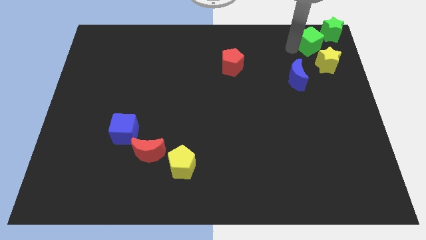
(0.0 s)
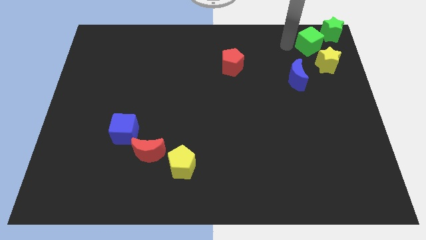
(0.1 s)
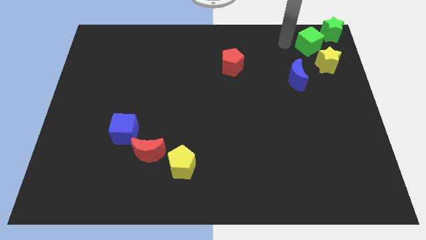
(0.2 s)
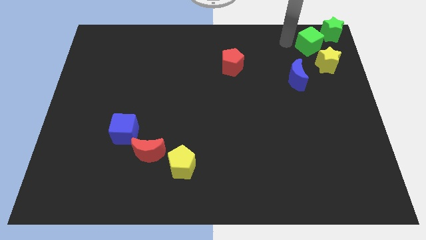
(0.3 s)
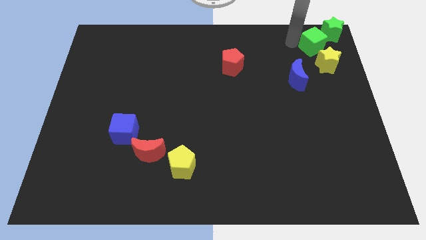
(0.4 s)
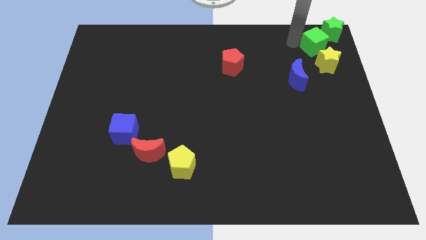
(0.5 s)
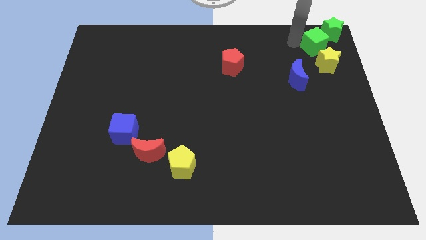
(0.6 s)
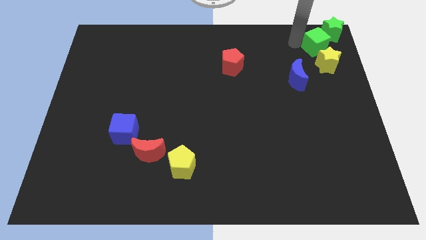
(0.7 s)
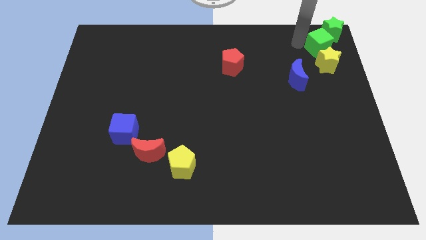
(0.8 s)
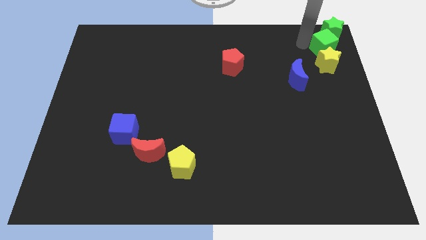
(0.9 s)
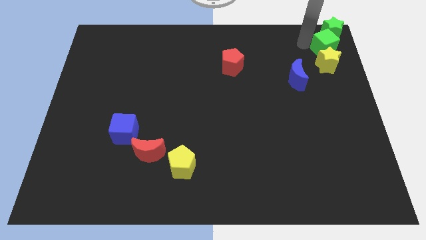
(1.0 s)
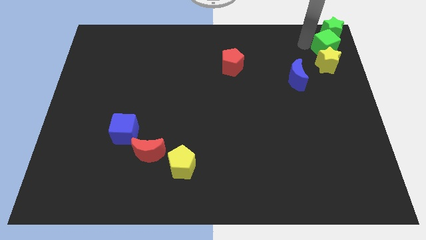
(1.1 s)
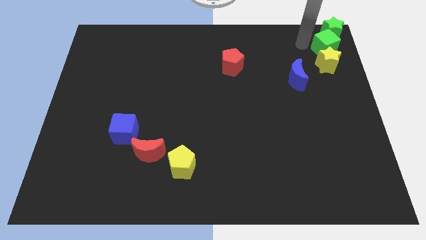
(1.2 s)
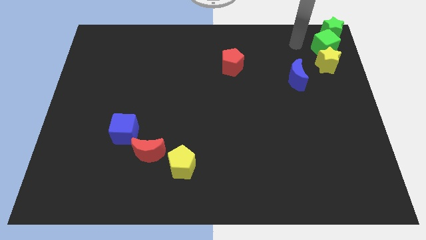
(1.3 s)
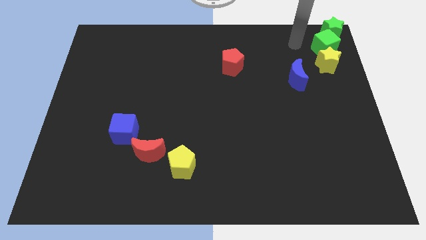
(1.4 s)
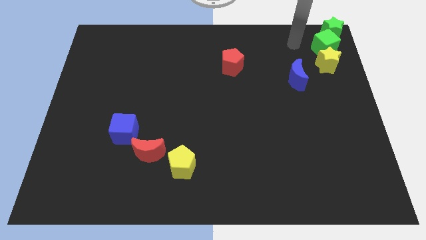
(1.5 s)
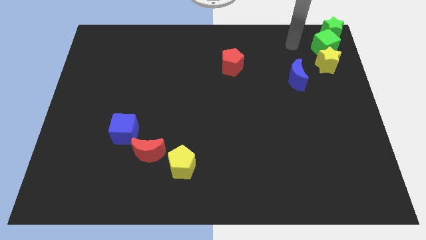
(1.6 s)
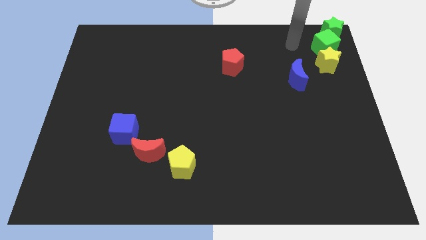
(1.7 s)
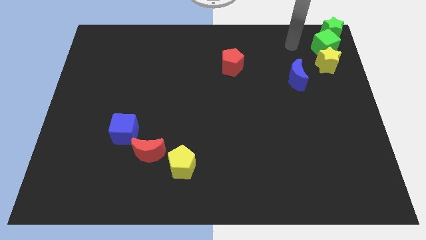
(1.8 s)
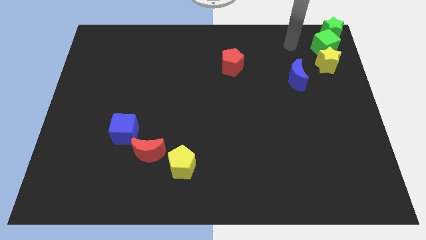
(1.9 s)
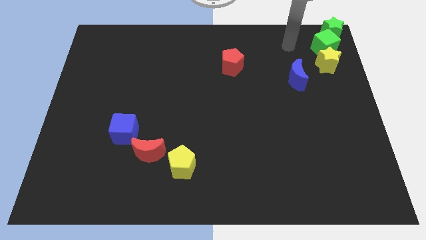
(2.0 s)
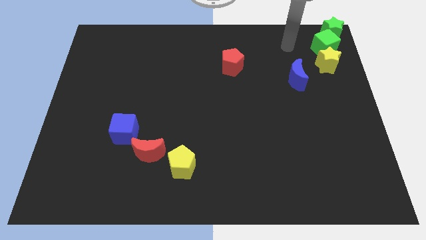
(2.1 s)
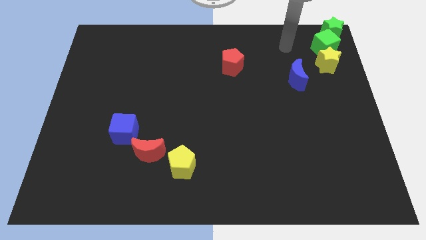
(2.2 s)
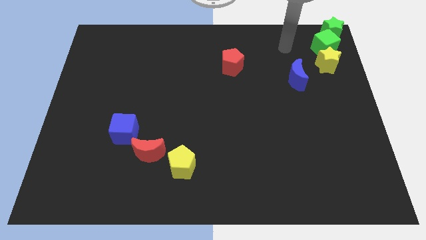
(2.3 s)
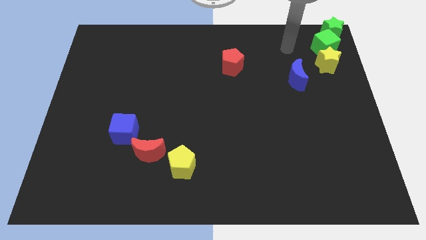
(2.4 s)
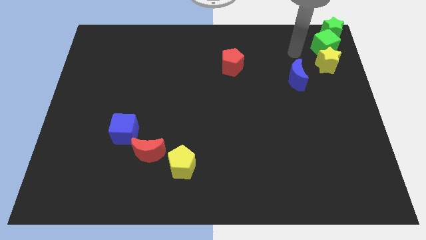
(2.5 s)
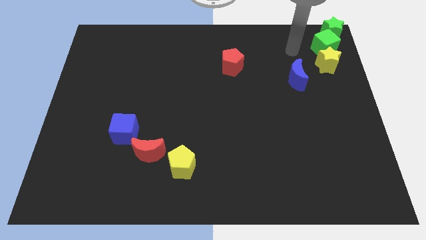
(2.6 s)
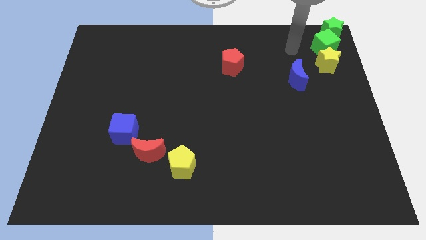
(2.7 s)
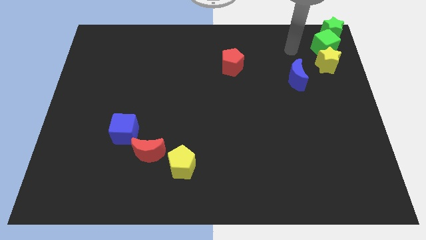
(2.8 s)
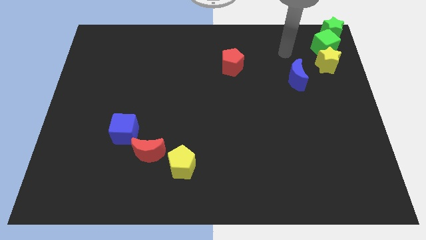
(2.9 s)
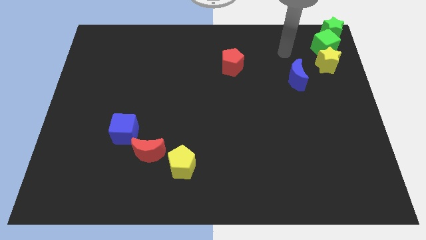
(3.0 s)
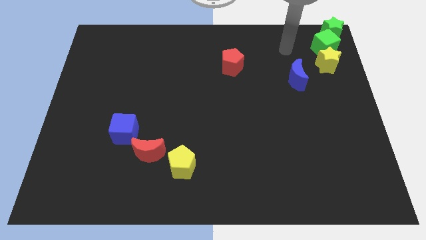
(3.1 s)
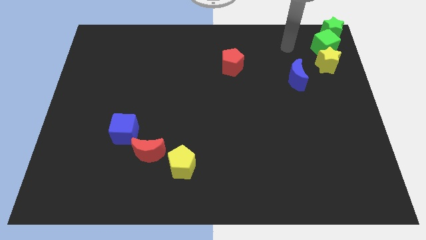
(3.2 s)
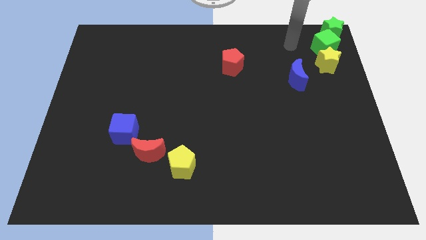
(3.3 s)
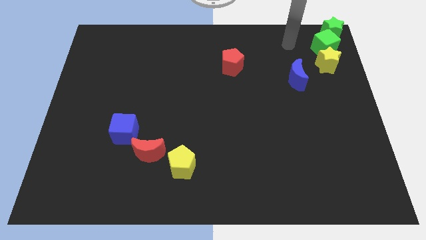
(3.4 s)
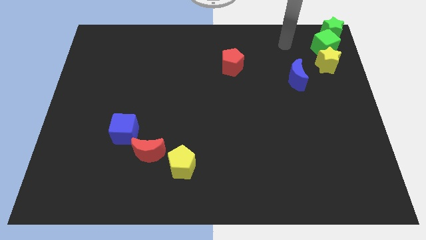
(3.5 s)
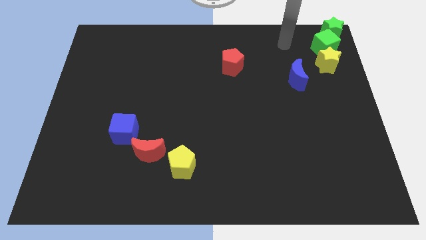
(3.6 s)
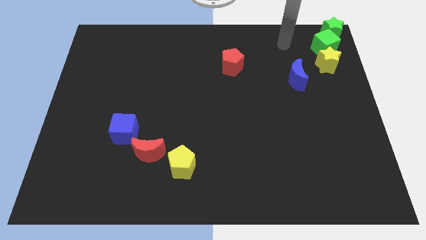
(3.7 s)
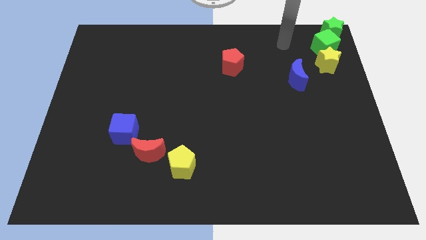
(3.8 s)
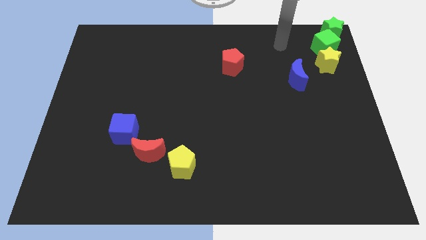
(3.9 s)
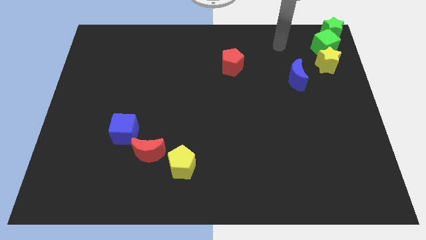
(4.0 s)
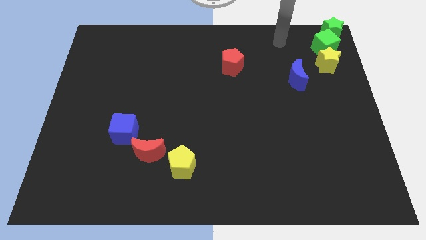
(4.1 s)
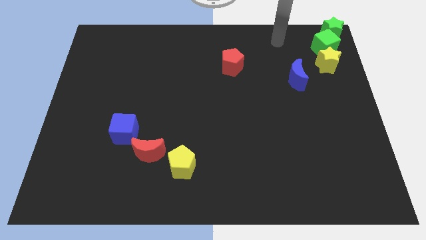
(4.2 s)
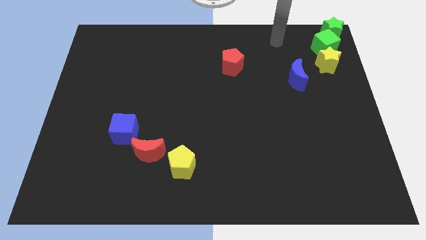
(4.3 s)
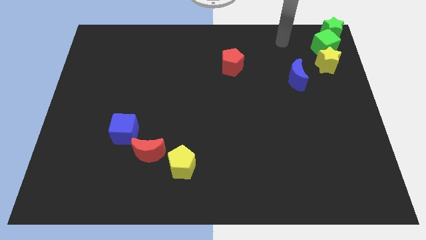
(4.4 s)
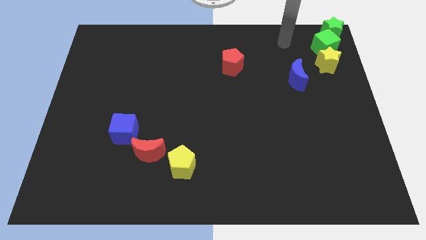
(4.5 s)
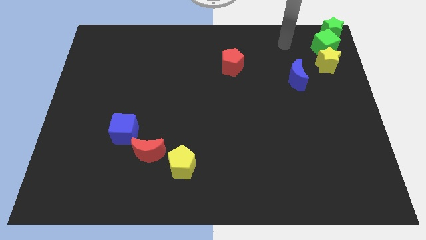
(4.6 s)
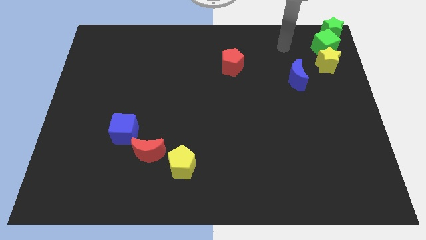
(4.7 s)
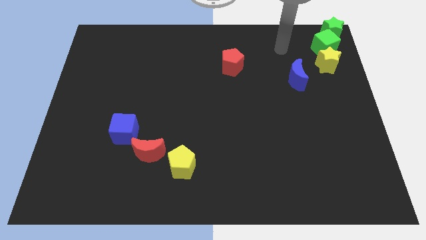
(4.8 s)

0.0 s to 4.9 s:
move the green cube slightly right corner to the board

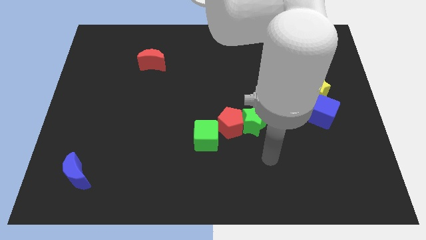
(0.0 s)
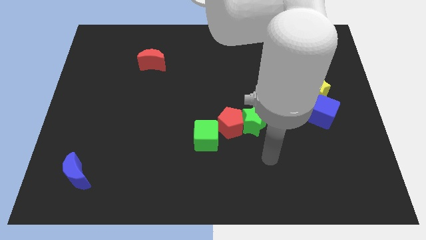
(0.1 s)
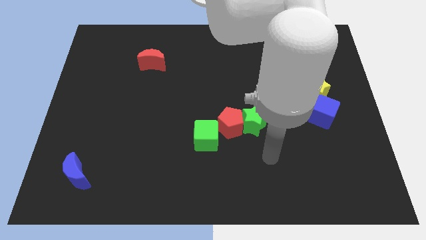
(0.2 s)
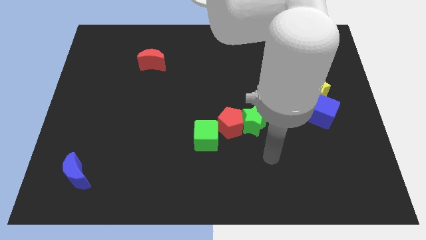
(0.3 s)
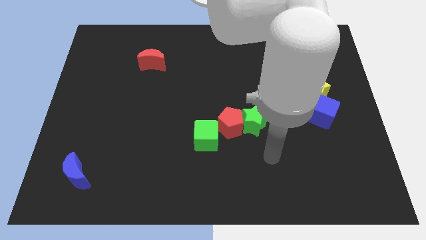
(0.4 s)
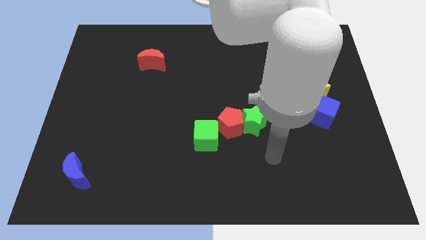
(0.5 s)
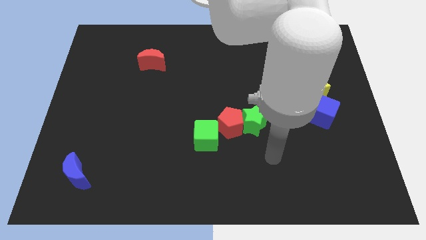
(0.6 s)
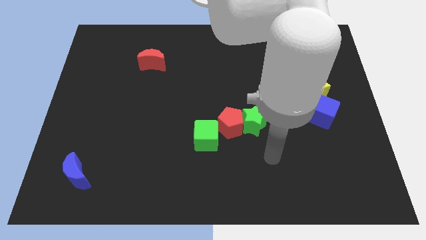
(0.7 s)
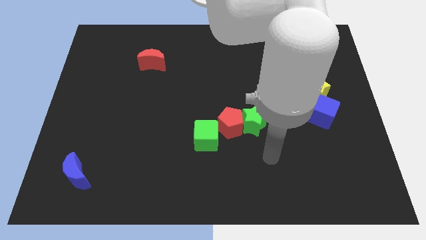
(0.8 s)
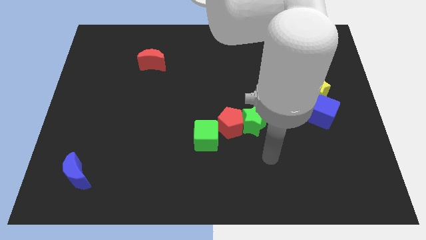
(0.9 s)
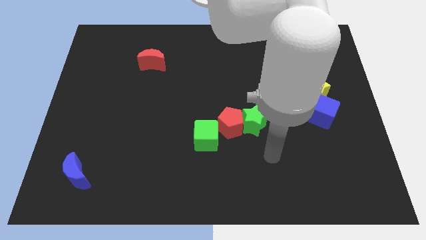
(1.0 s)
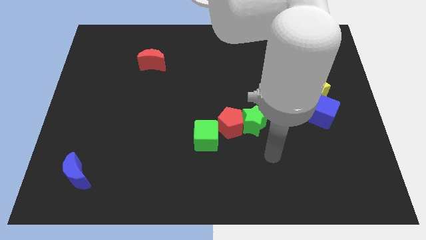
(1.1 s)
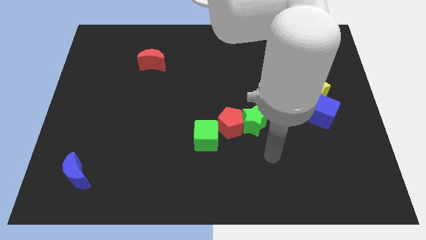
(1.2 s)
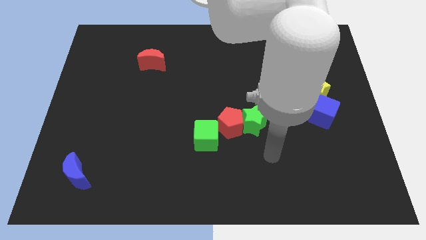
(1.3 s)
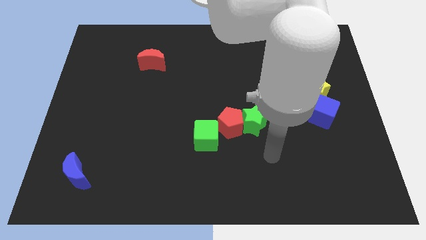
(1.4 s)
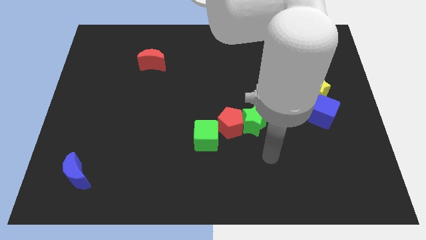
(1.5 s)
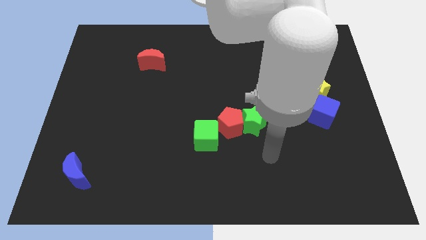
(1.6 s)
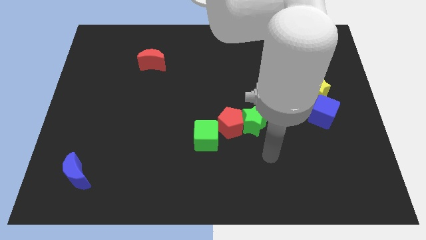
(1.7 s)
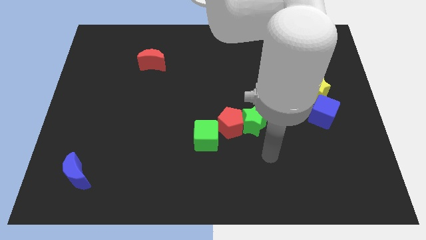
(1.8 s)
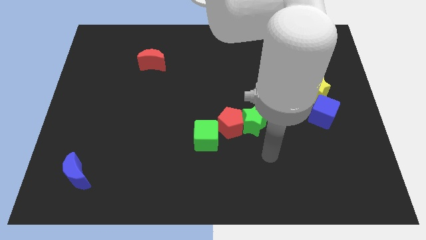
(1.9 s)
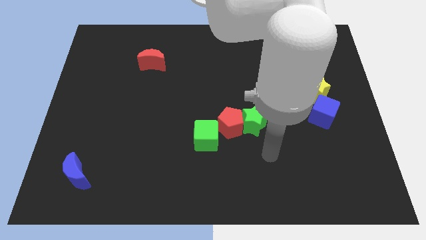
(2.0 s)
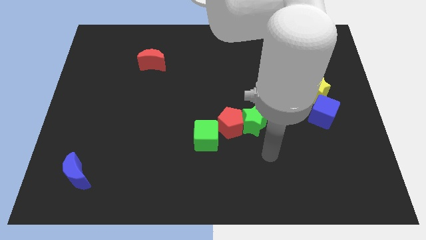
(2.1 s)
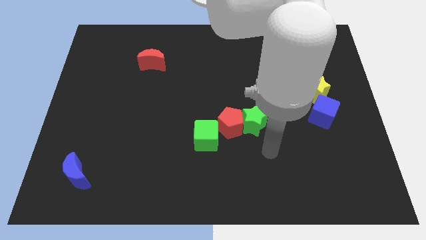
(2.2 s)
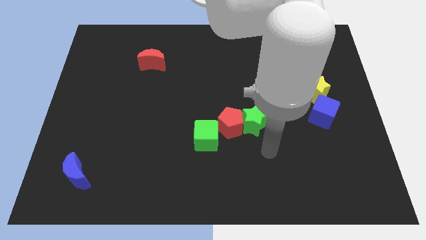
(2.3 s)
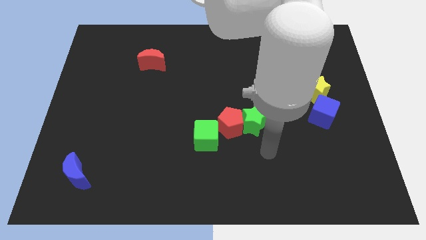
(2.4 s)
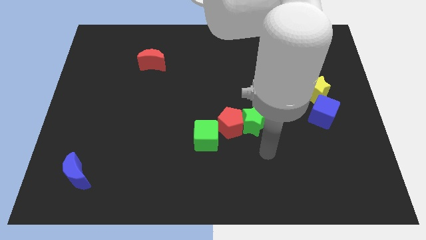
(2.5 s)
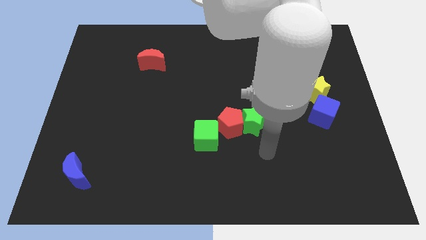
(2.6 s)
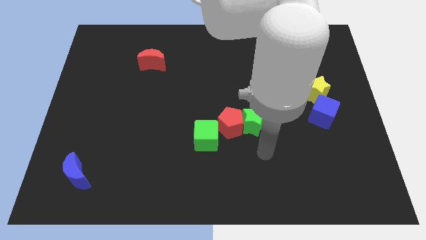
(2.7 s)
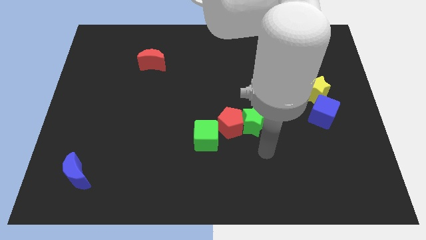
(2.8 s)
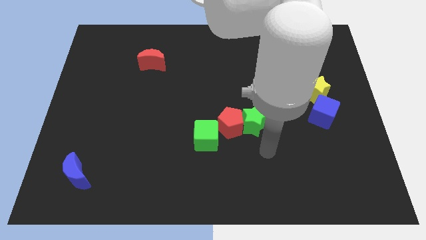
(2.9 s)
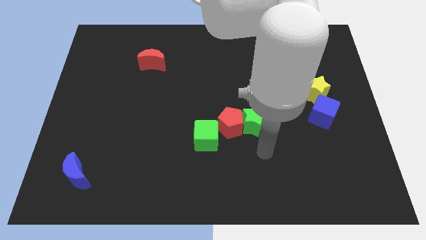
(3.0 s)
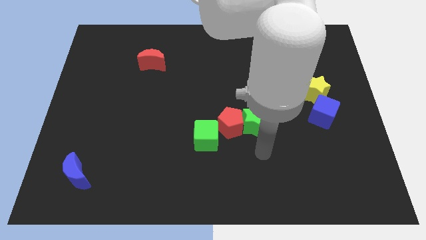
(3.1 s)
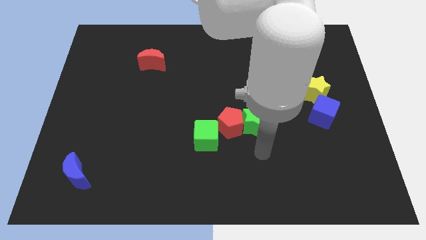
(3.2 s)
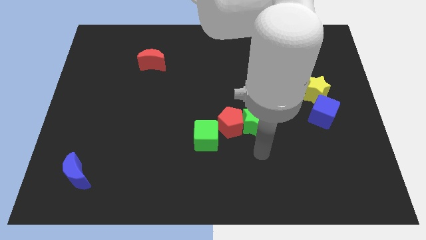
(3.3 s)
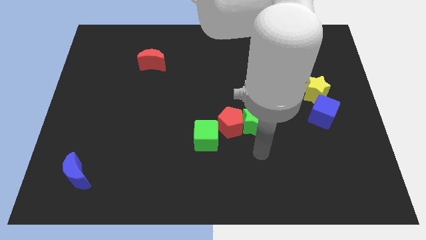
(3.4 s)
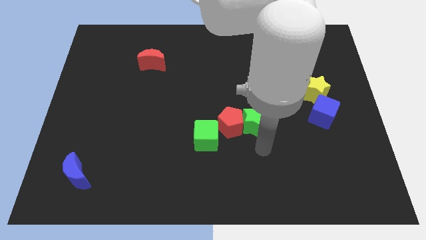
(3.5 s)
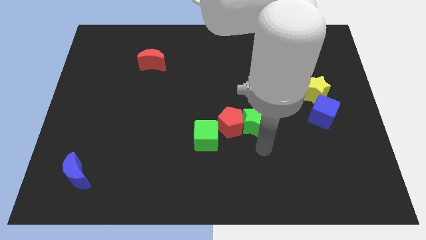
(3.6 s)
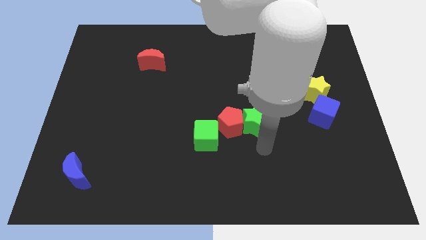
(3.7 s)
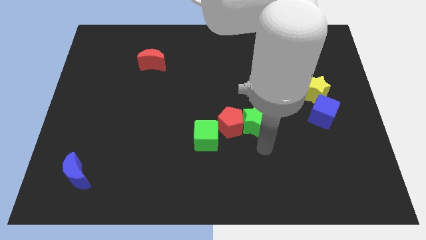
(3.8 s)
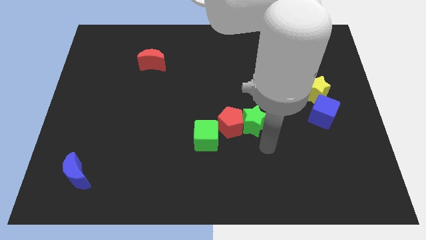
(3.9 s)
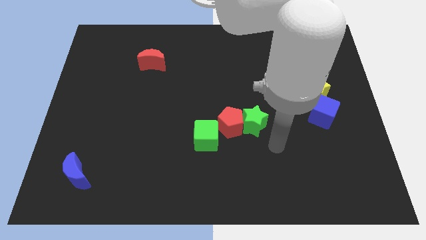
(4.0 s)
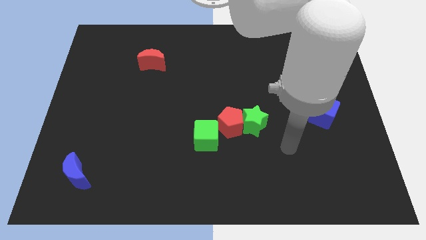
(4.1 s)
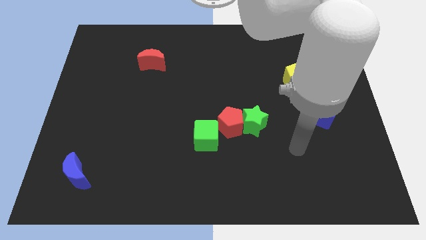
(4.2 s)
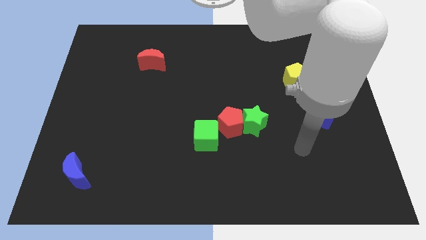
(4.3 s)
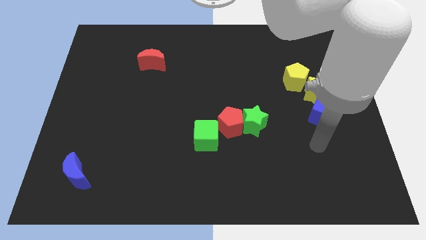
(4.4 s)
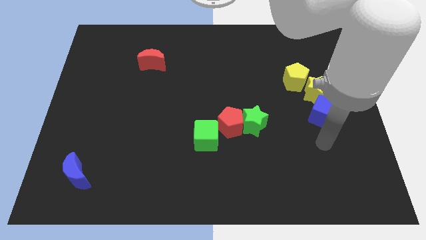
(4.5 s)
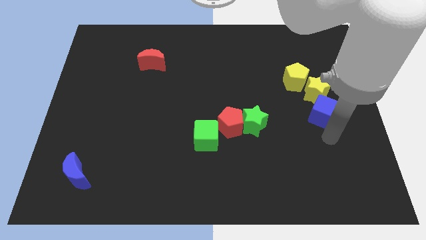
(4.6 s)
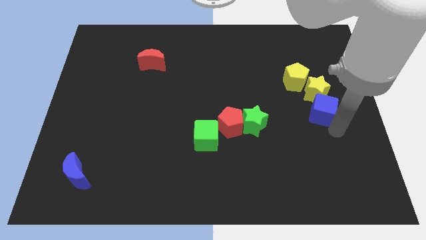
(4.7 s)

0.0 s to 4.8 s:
move your arm towards the blue cube
